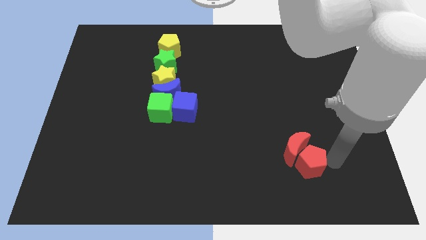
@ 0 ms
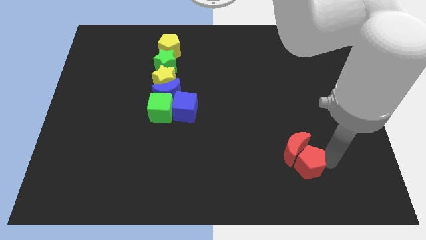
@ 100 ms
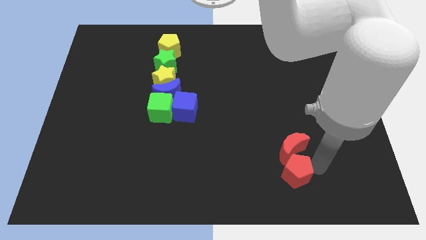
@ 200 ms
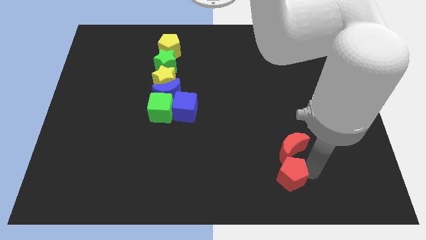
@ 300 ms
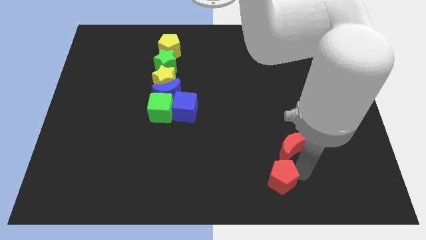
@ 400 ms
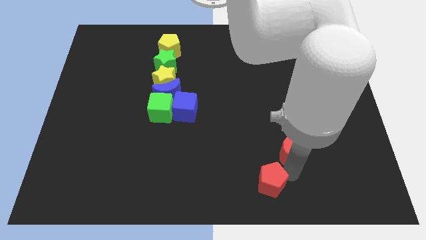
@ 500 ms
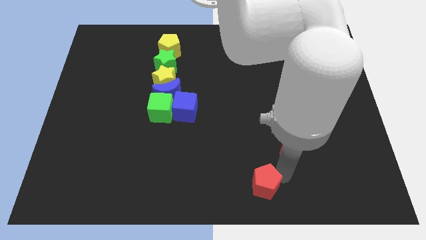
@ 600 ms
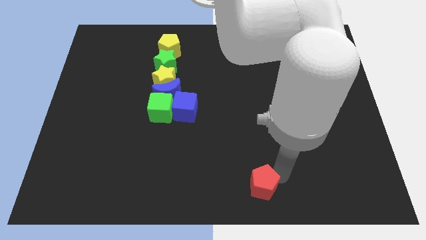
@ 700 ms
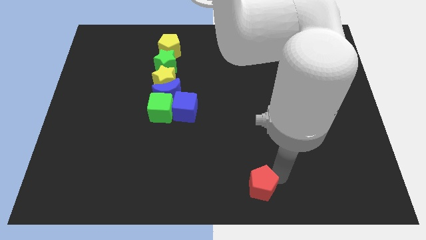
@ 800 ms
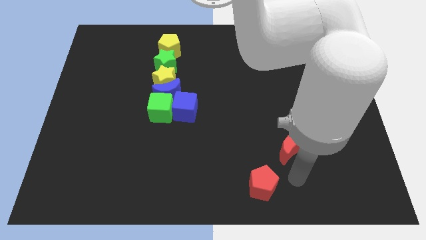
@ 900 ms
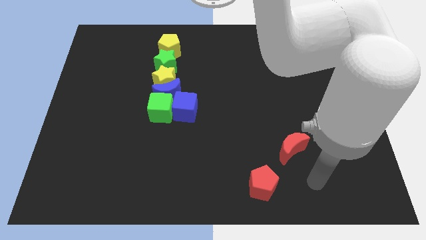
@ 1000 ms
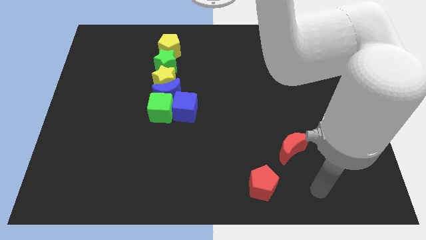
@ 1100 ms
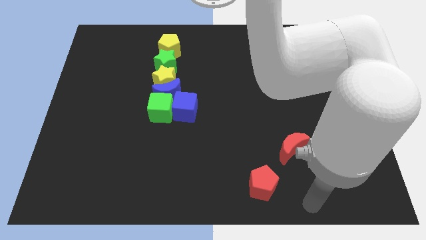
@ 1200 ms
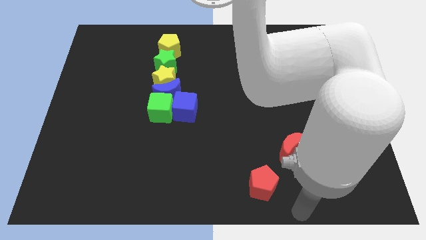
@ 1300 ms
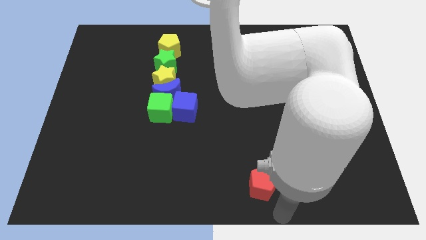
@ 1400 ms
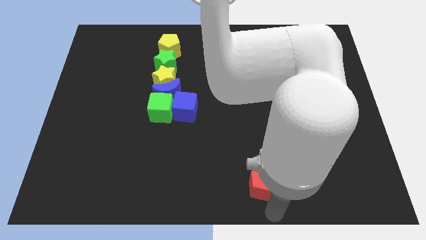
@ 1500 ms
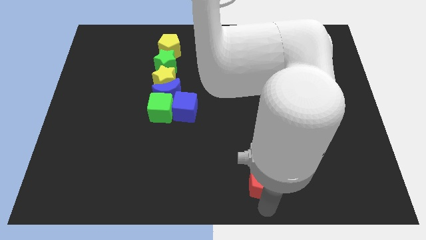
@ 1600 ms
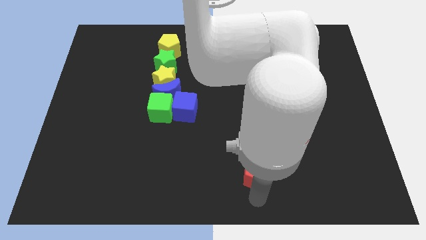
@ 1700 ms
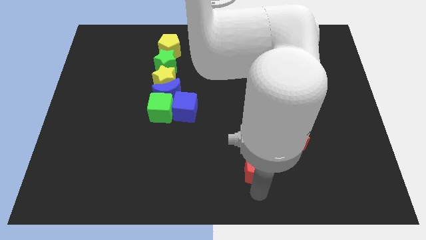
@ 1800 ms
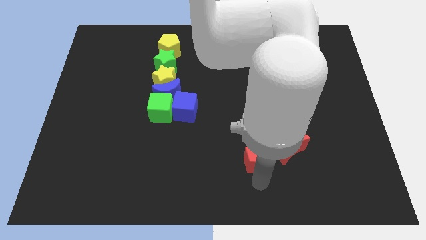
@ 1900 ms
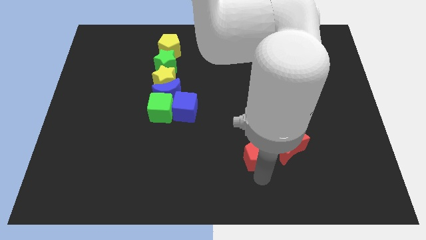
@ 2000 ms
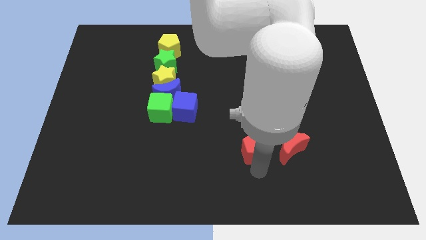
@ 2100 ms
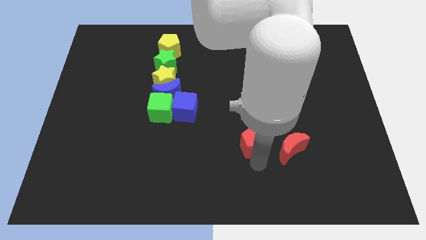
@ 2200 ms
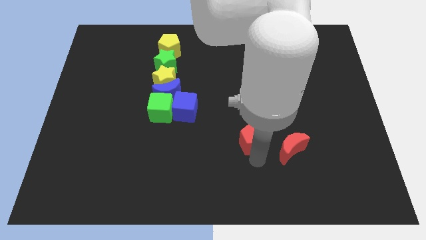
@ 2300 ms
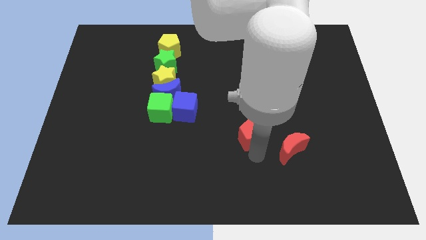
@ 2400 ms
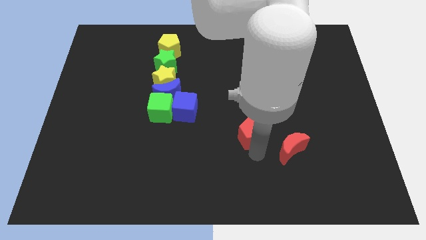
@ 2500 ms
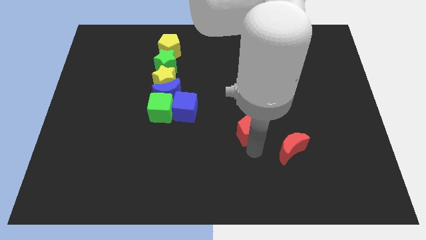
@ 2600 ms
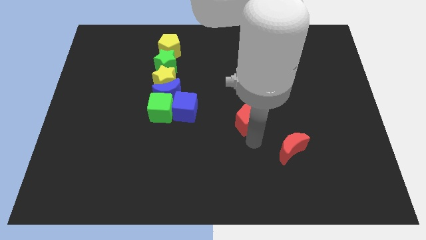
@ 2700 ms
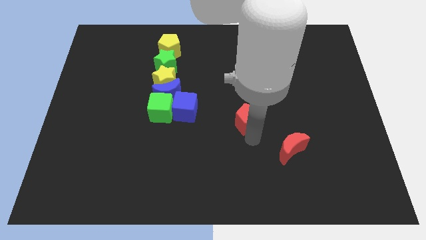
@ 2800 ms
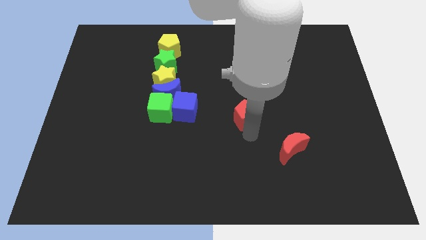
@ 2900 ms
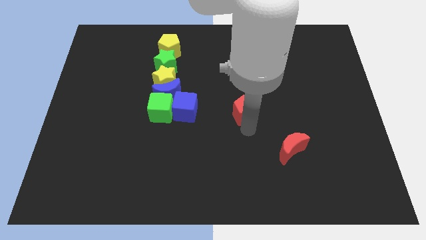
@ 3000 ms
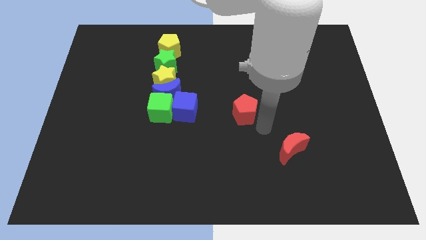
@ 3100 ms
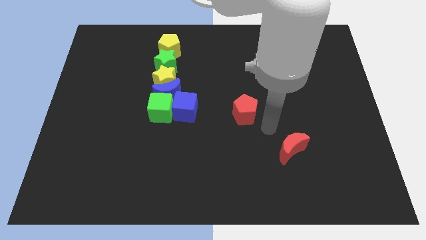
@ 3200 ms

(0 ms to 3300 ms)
separate the red pentagon from the red moon

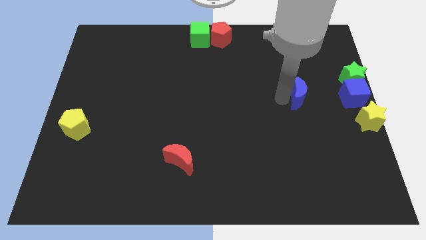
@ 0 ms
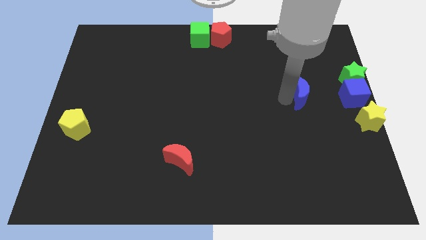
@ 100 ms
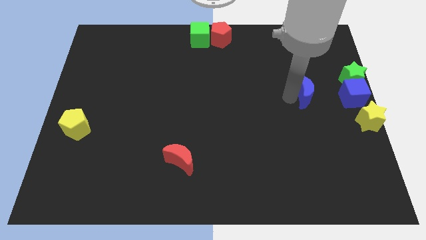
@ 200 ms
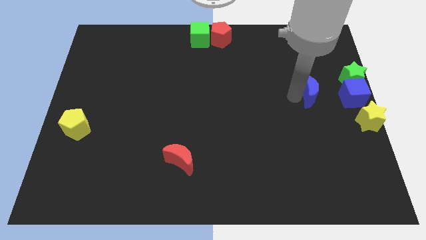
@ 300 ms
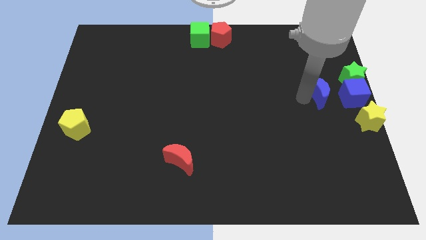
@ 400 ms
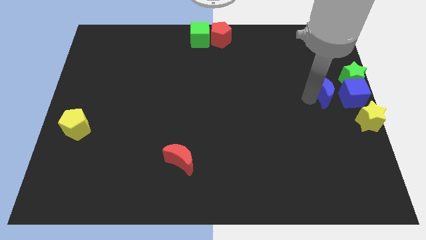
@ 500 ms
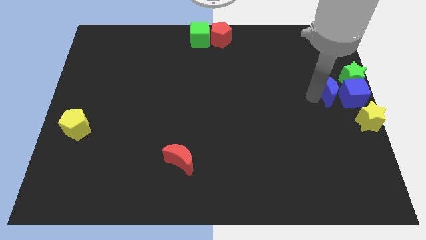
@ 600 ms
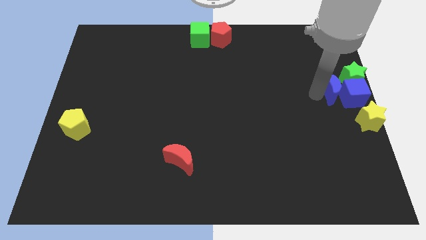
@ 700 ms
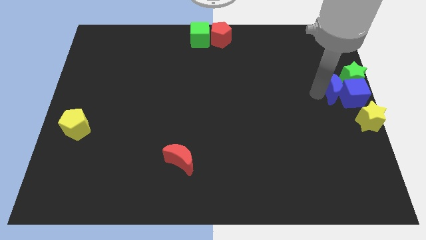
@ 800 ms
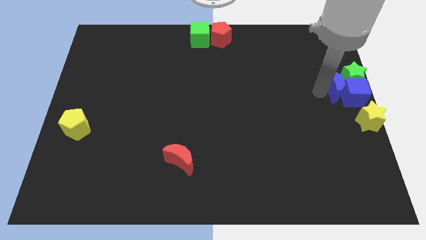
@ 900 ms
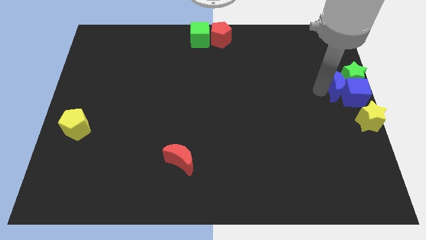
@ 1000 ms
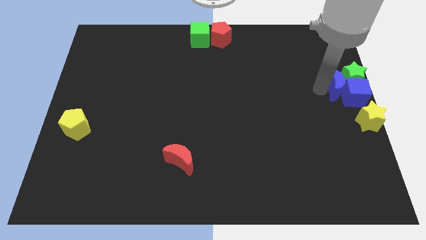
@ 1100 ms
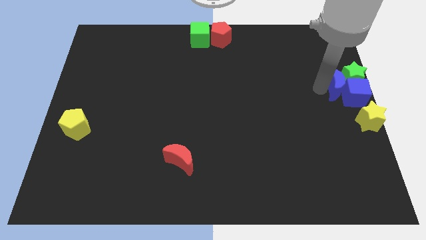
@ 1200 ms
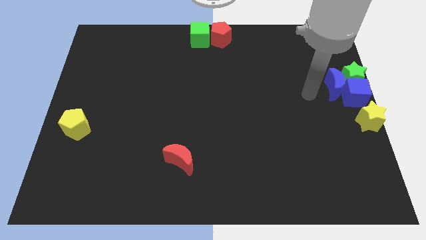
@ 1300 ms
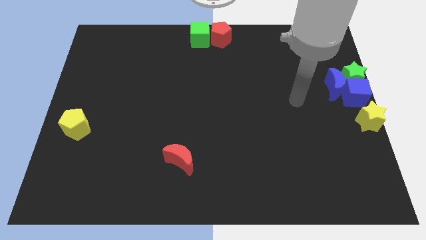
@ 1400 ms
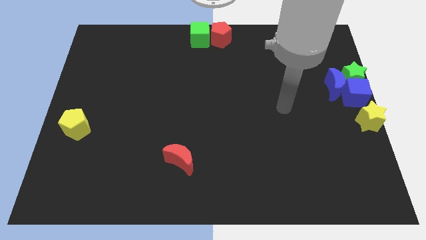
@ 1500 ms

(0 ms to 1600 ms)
move the blue moon into the blue cube

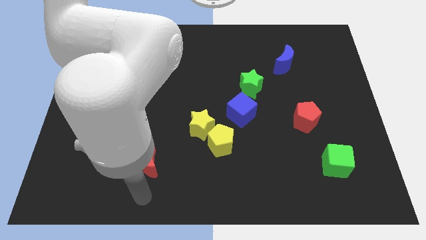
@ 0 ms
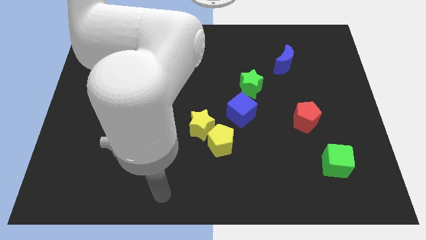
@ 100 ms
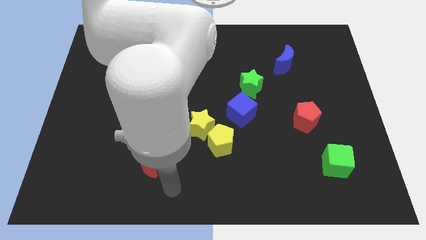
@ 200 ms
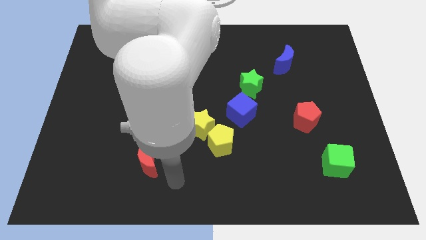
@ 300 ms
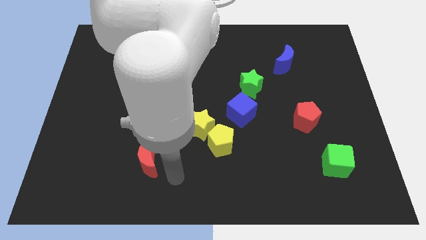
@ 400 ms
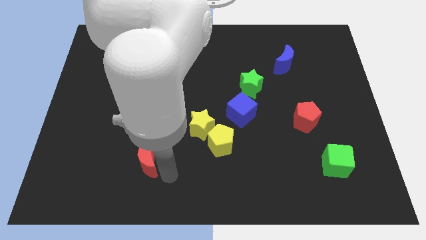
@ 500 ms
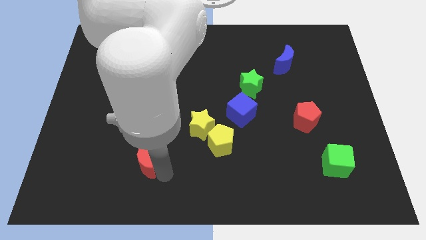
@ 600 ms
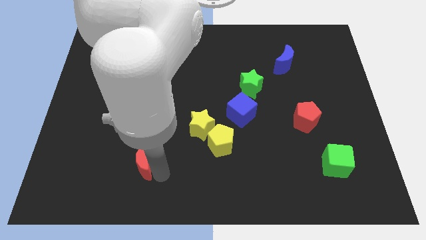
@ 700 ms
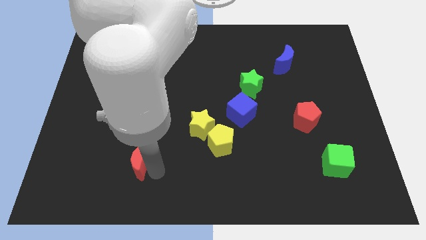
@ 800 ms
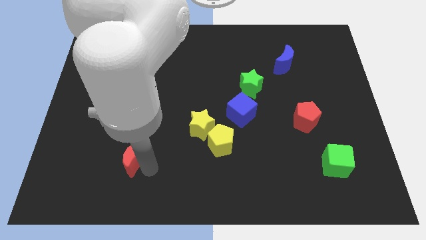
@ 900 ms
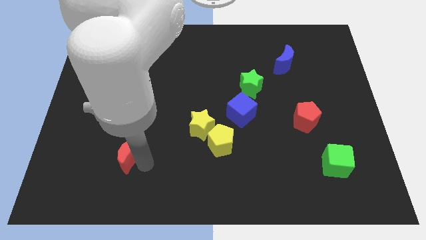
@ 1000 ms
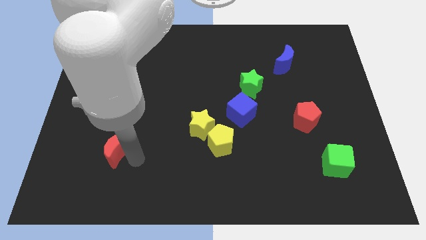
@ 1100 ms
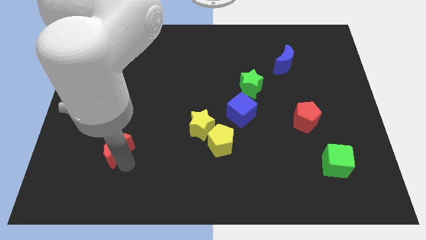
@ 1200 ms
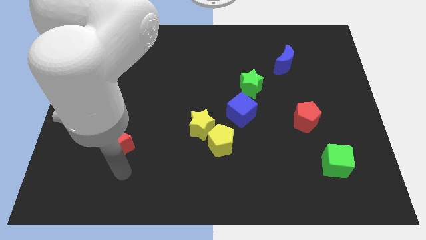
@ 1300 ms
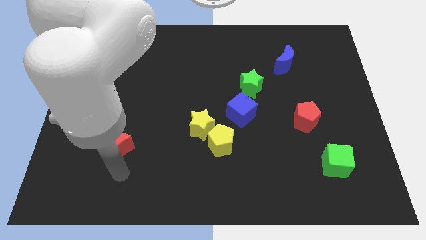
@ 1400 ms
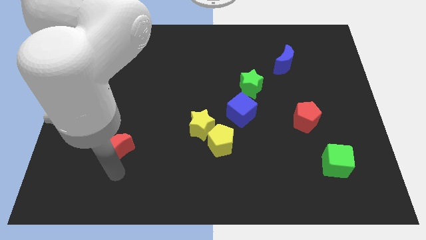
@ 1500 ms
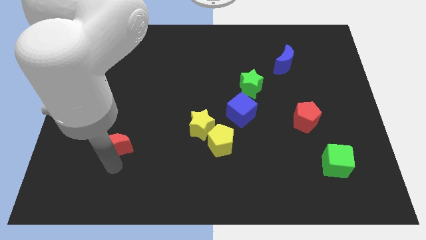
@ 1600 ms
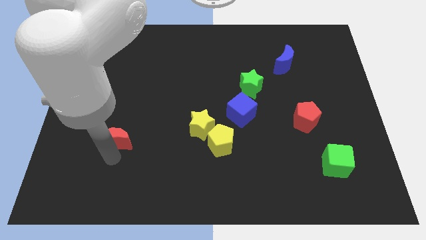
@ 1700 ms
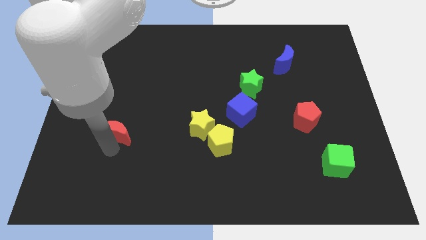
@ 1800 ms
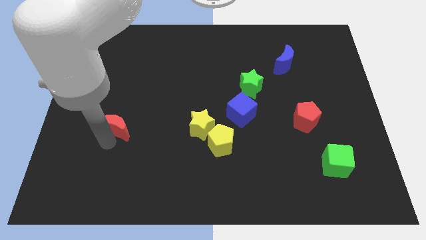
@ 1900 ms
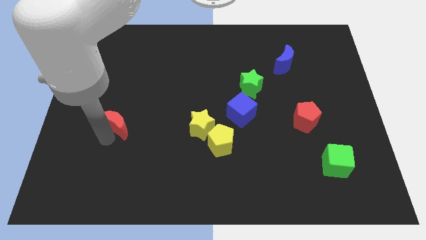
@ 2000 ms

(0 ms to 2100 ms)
move the red crescent to the left of the yellow star

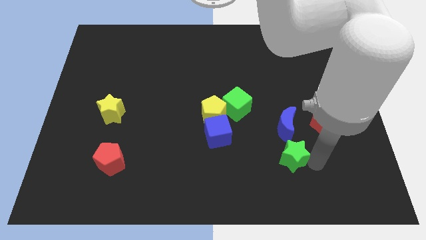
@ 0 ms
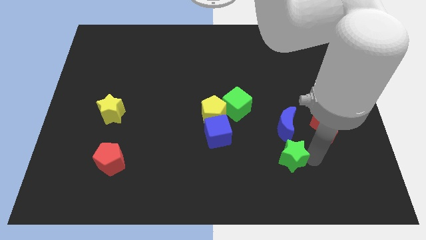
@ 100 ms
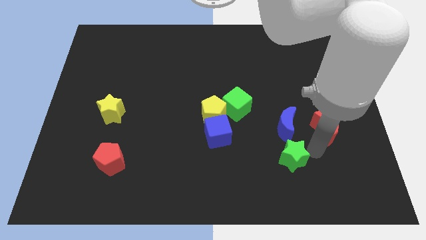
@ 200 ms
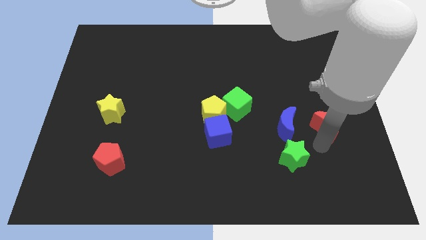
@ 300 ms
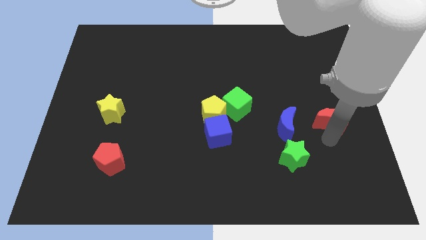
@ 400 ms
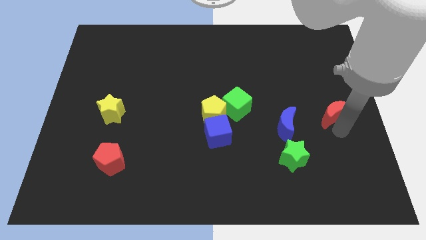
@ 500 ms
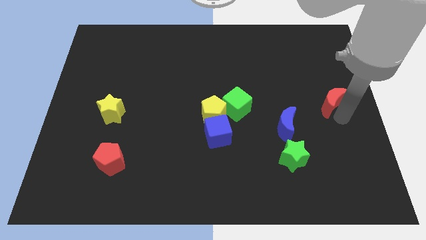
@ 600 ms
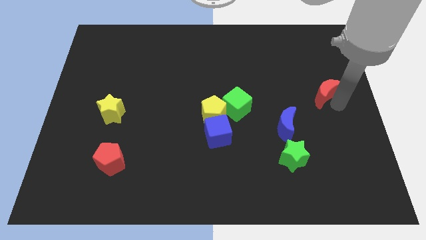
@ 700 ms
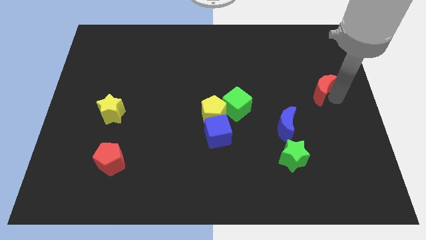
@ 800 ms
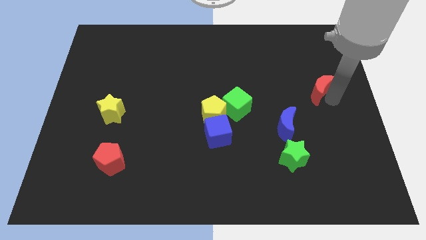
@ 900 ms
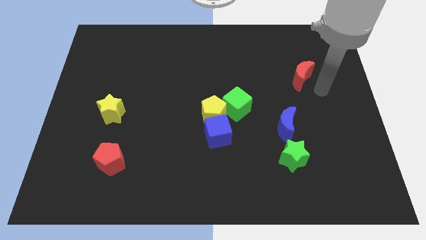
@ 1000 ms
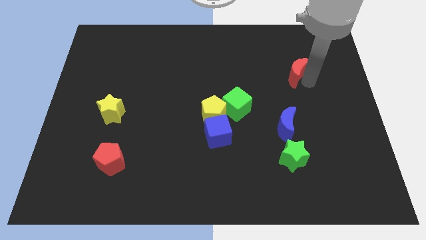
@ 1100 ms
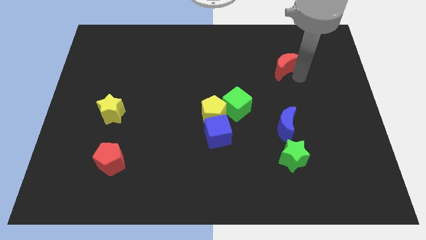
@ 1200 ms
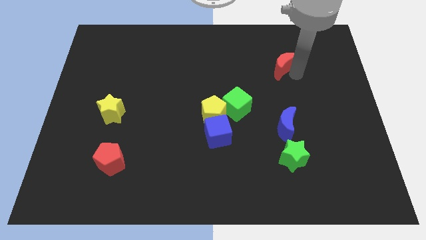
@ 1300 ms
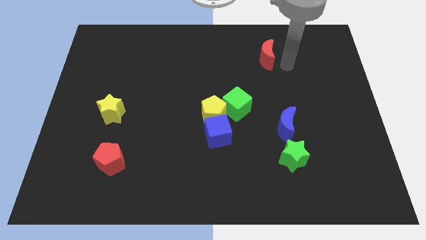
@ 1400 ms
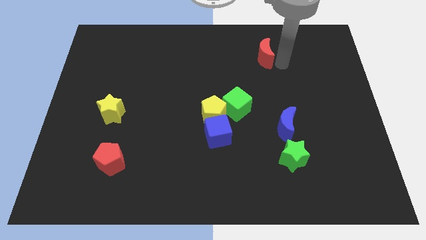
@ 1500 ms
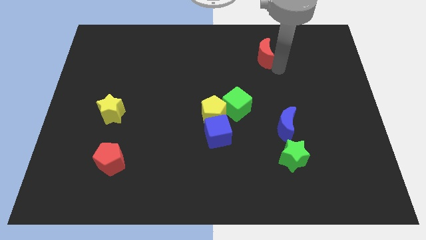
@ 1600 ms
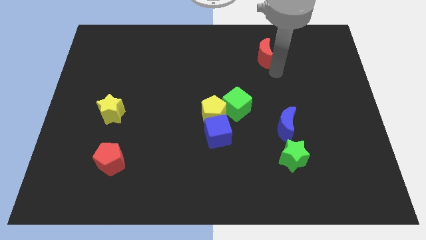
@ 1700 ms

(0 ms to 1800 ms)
move the red moon to the top center
